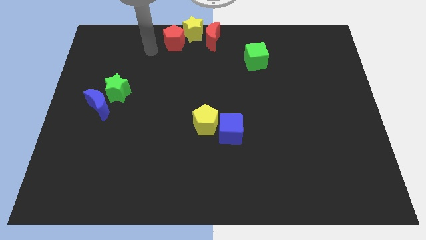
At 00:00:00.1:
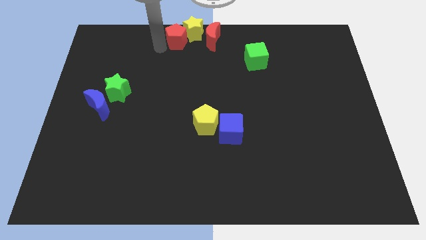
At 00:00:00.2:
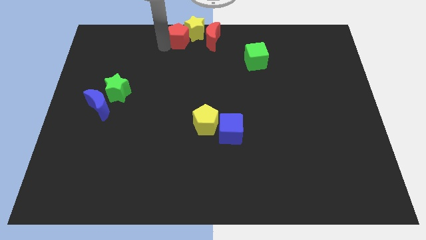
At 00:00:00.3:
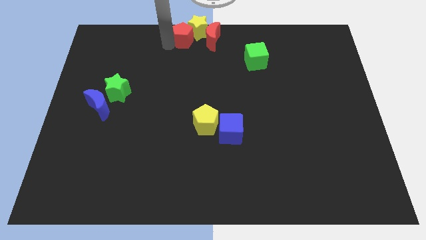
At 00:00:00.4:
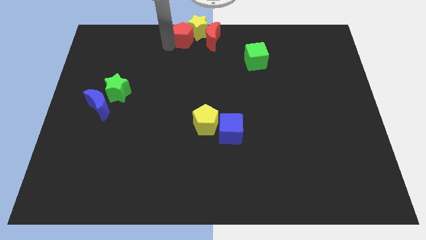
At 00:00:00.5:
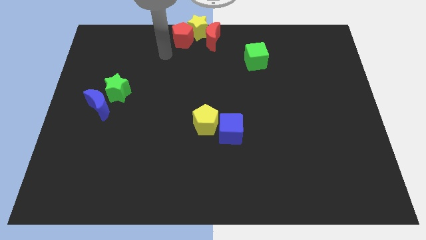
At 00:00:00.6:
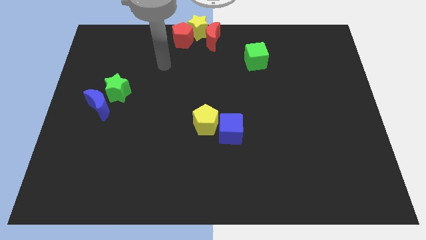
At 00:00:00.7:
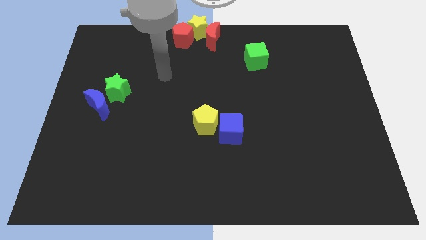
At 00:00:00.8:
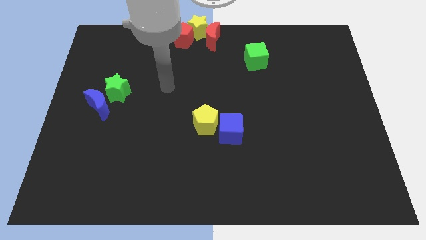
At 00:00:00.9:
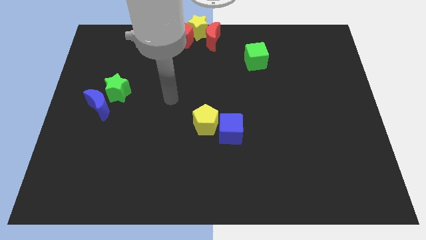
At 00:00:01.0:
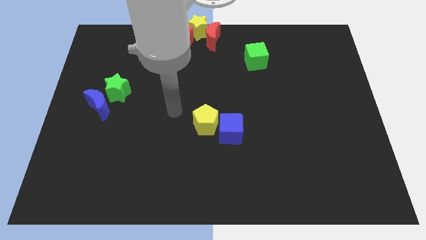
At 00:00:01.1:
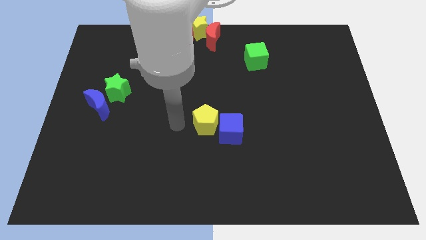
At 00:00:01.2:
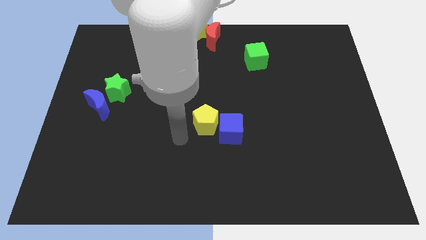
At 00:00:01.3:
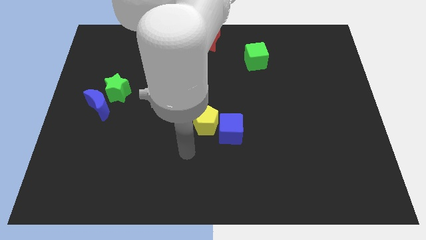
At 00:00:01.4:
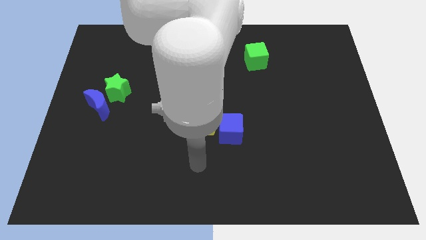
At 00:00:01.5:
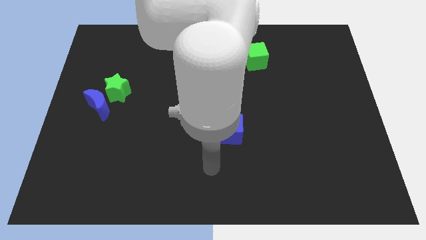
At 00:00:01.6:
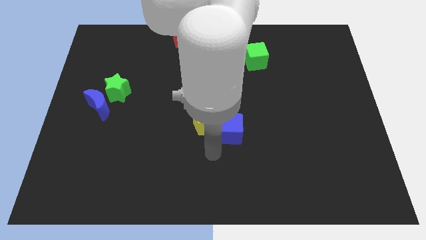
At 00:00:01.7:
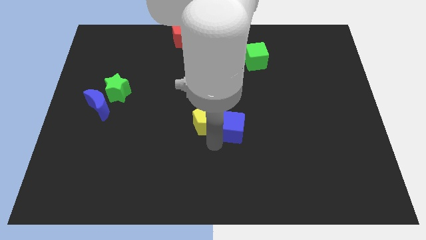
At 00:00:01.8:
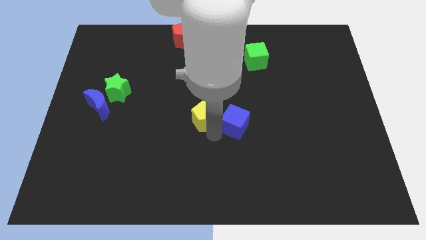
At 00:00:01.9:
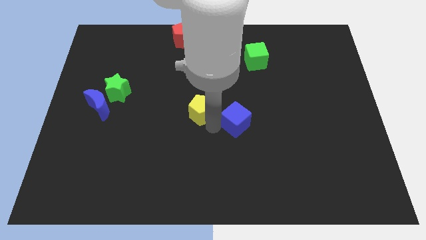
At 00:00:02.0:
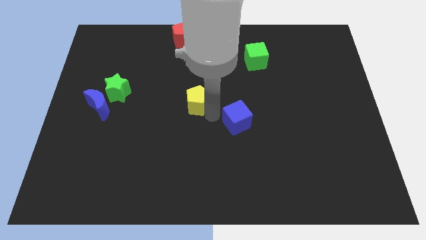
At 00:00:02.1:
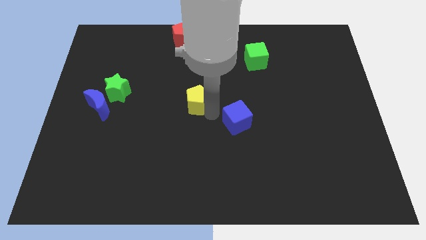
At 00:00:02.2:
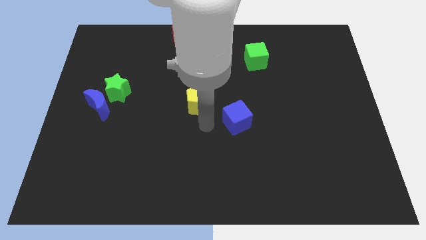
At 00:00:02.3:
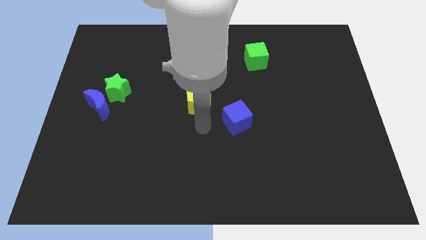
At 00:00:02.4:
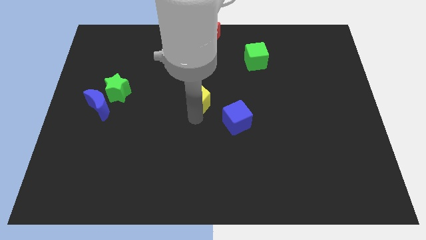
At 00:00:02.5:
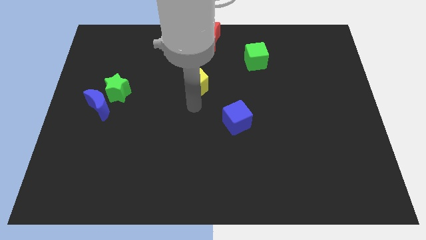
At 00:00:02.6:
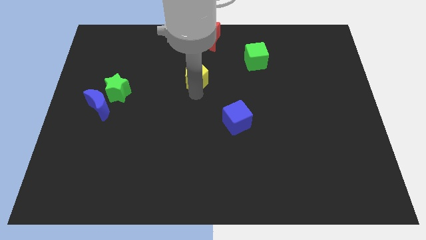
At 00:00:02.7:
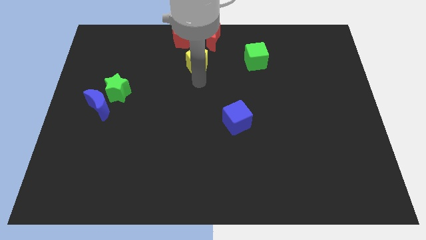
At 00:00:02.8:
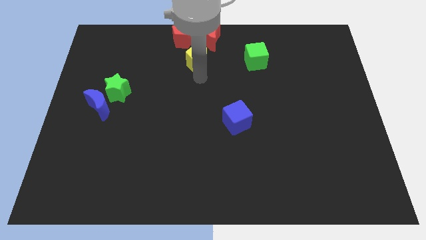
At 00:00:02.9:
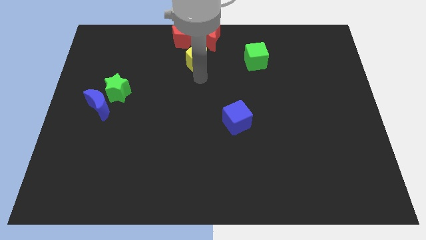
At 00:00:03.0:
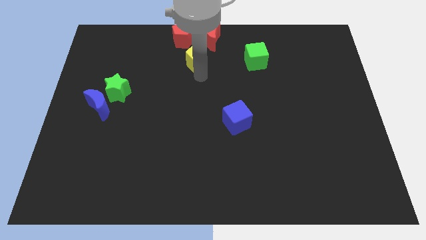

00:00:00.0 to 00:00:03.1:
separate the yellow pentagon and the blue cube

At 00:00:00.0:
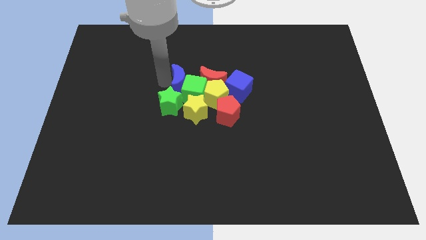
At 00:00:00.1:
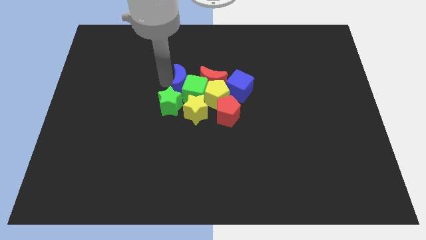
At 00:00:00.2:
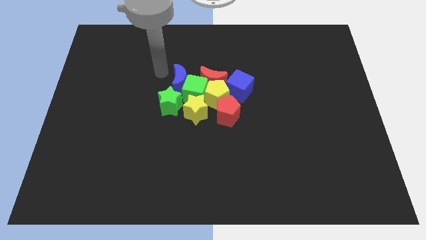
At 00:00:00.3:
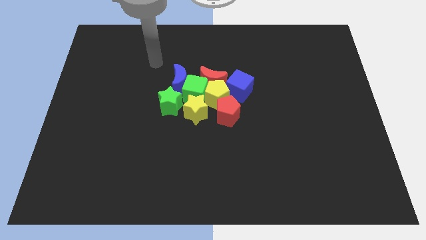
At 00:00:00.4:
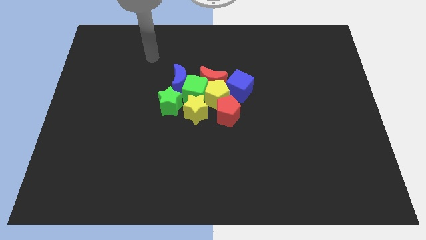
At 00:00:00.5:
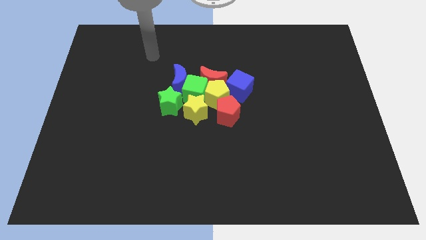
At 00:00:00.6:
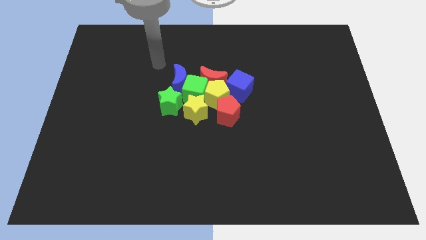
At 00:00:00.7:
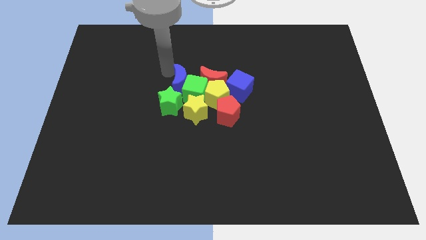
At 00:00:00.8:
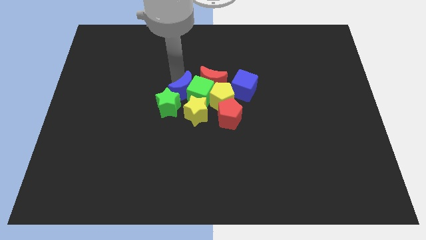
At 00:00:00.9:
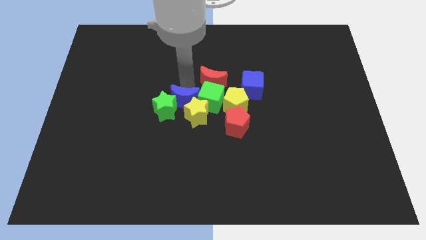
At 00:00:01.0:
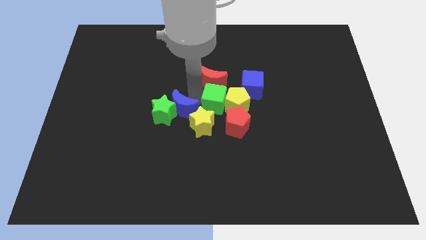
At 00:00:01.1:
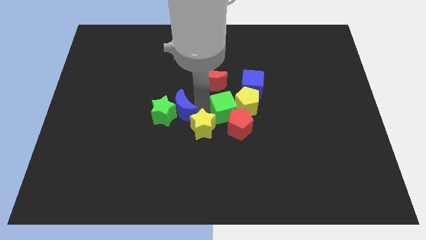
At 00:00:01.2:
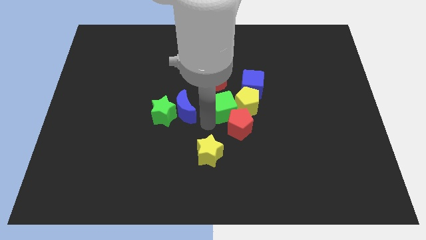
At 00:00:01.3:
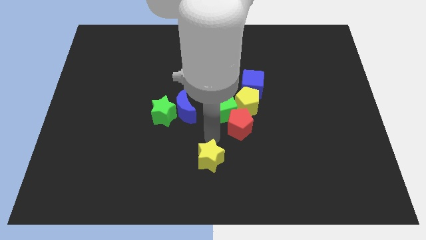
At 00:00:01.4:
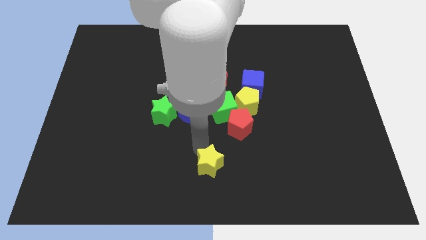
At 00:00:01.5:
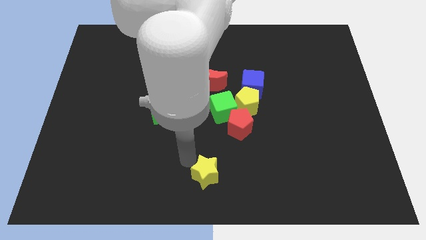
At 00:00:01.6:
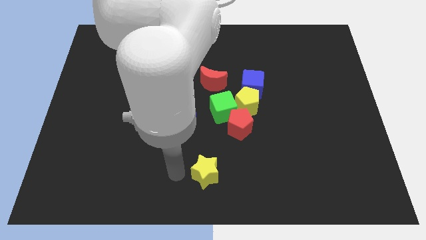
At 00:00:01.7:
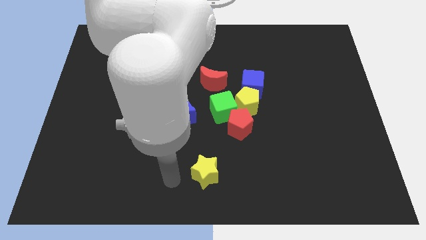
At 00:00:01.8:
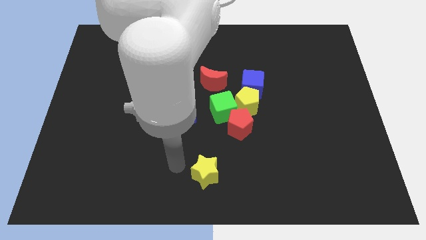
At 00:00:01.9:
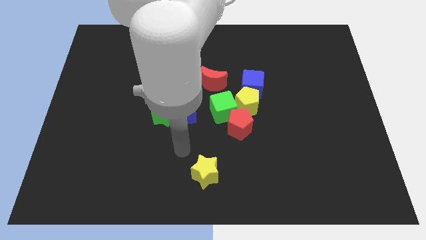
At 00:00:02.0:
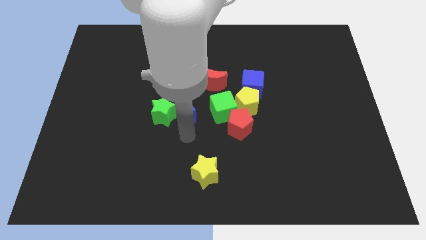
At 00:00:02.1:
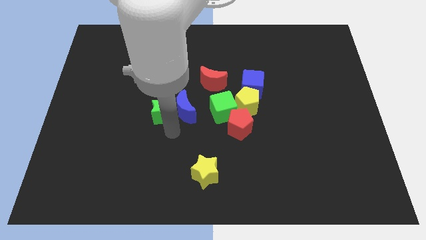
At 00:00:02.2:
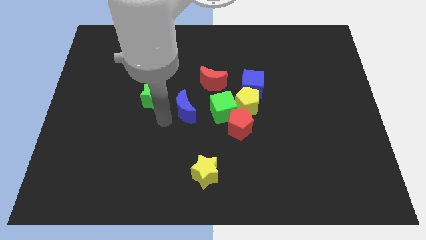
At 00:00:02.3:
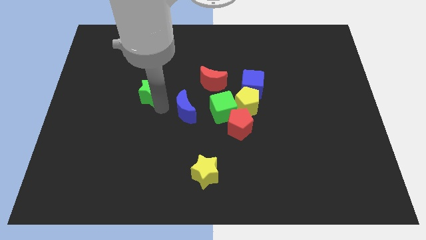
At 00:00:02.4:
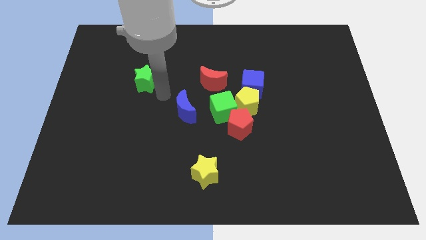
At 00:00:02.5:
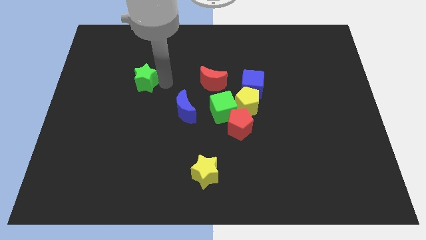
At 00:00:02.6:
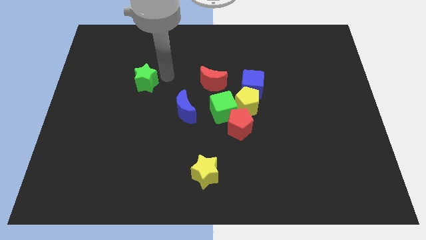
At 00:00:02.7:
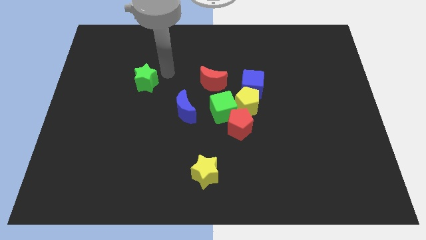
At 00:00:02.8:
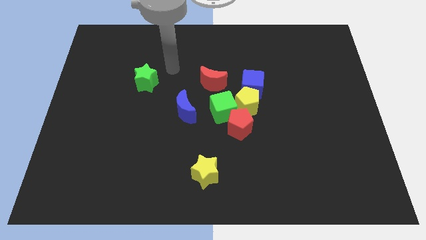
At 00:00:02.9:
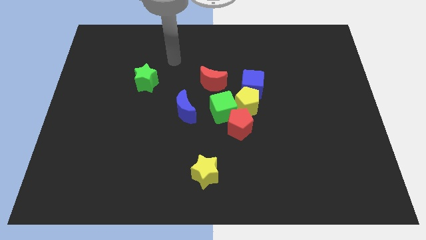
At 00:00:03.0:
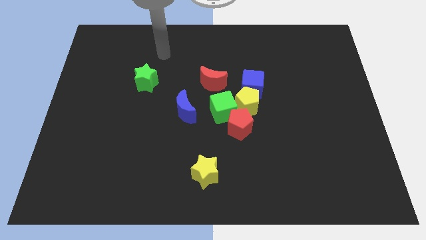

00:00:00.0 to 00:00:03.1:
separate green and yellow stars from blue moon

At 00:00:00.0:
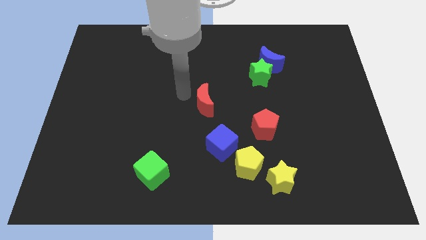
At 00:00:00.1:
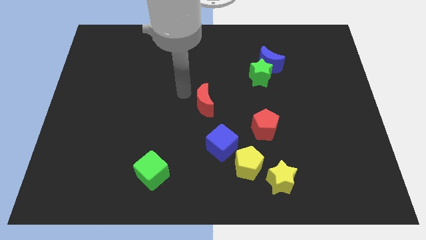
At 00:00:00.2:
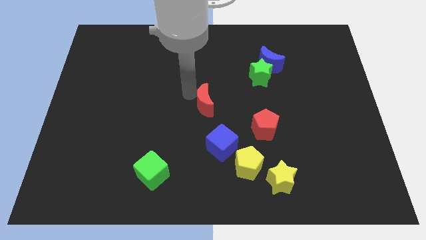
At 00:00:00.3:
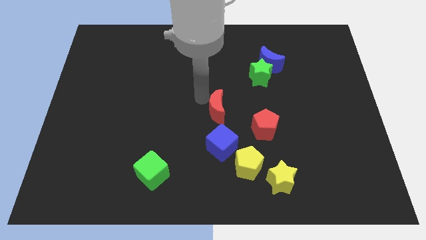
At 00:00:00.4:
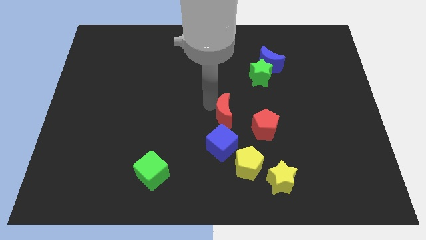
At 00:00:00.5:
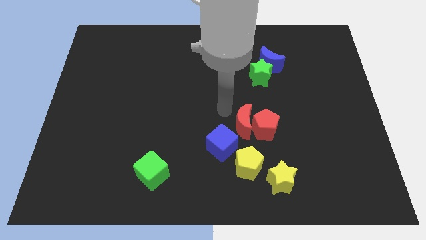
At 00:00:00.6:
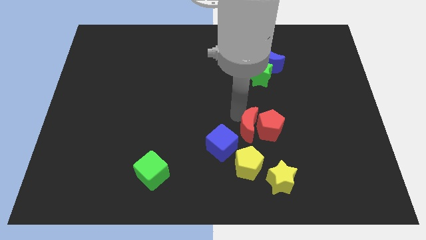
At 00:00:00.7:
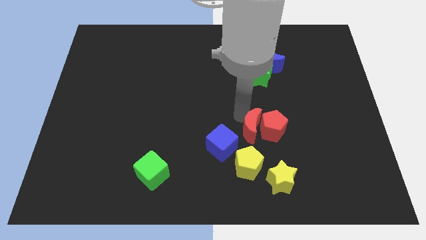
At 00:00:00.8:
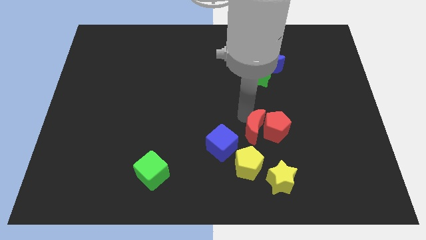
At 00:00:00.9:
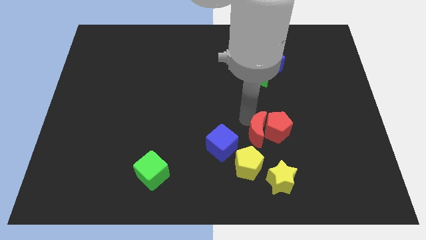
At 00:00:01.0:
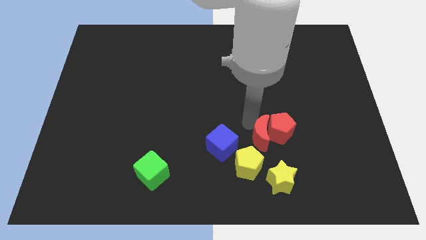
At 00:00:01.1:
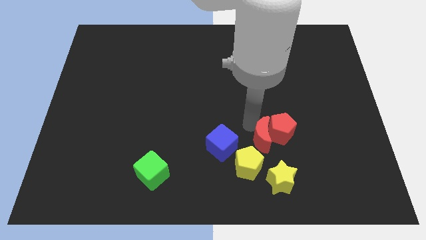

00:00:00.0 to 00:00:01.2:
push the red crescent into the red pentagon

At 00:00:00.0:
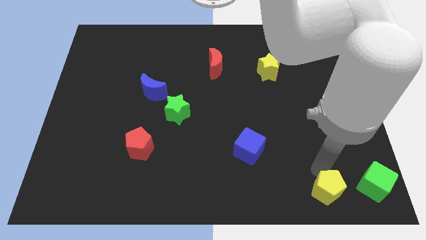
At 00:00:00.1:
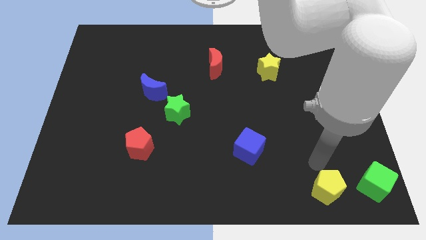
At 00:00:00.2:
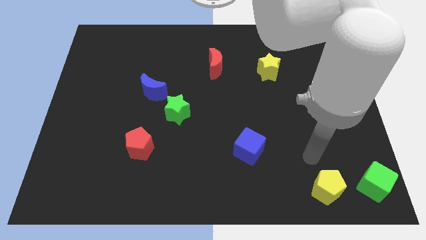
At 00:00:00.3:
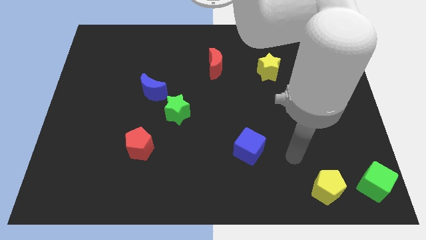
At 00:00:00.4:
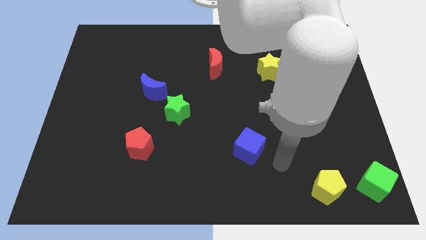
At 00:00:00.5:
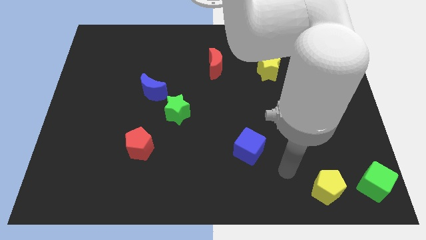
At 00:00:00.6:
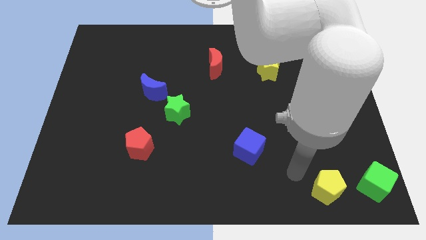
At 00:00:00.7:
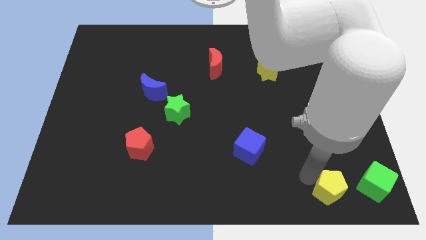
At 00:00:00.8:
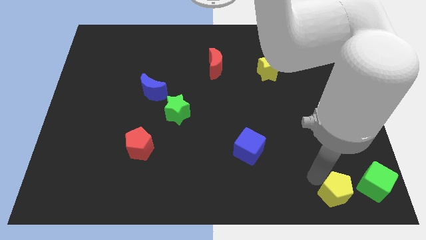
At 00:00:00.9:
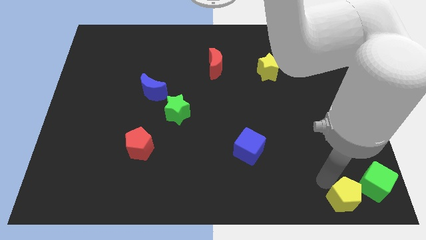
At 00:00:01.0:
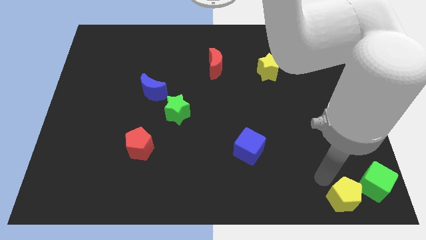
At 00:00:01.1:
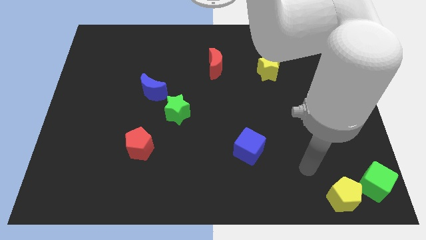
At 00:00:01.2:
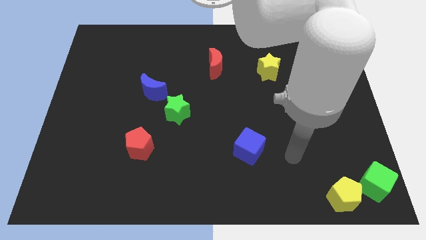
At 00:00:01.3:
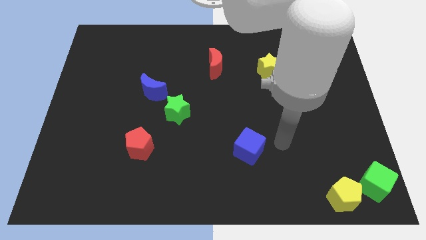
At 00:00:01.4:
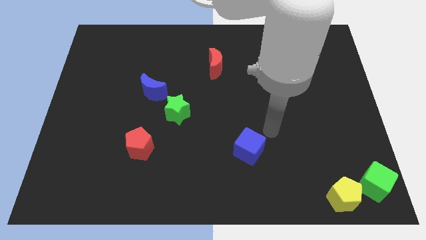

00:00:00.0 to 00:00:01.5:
push the yellow pentagon into the green cube

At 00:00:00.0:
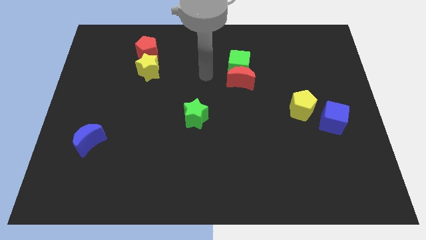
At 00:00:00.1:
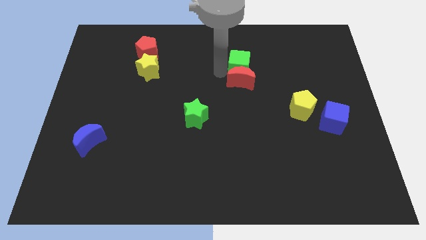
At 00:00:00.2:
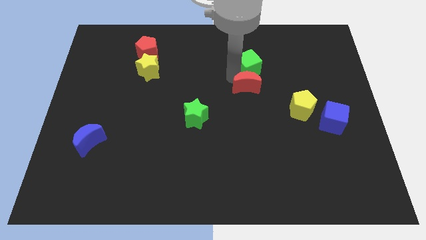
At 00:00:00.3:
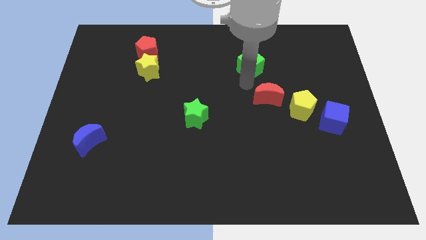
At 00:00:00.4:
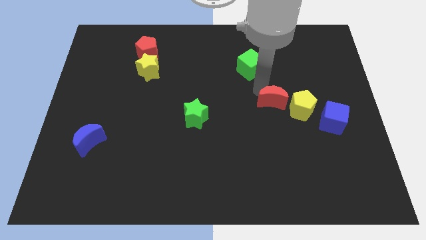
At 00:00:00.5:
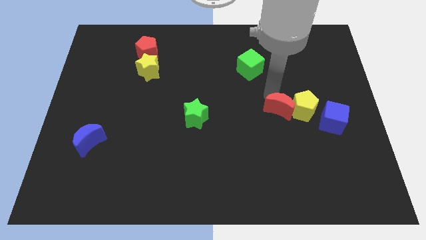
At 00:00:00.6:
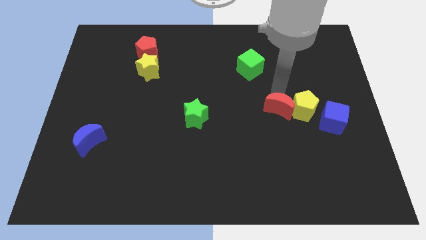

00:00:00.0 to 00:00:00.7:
place the red crescent to the left of the yellow pentagon
